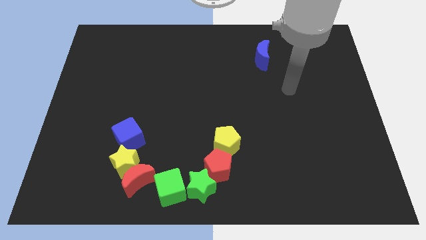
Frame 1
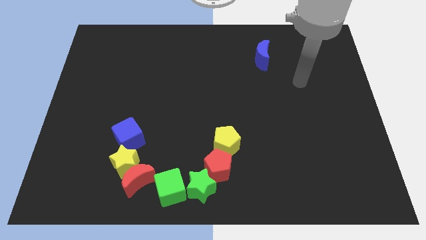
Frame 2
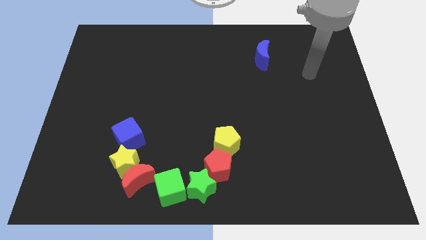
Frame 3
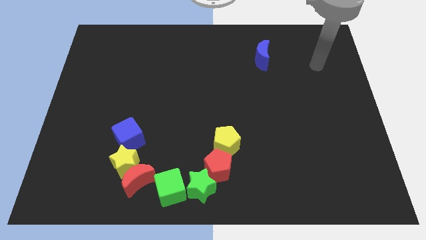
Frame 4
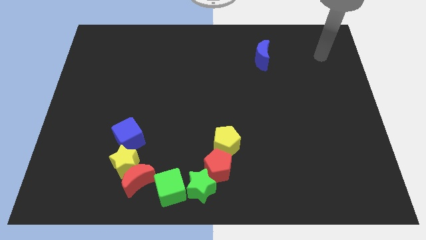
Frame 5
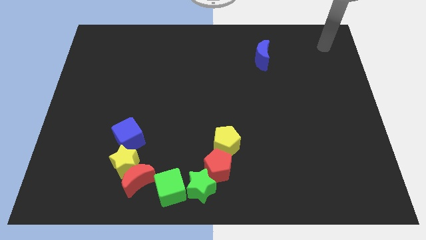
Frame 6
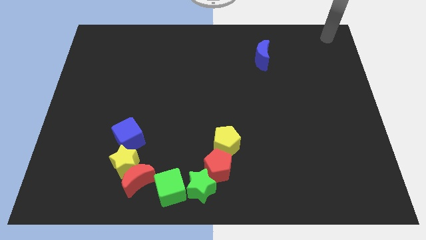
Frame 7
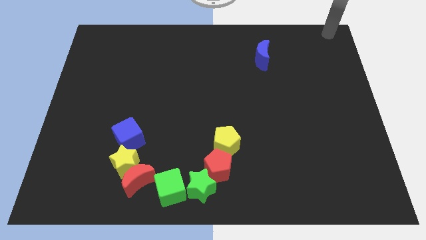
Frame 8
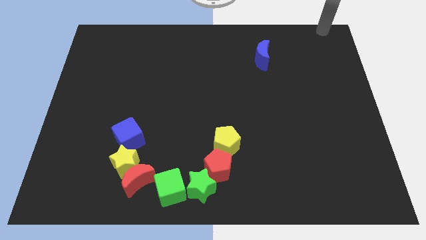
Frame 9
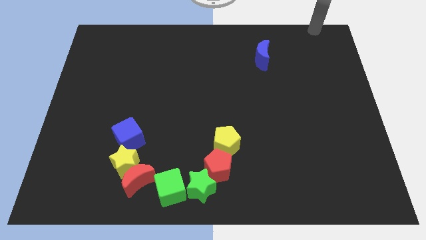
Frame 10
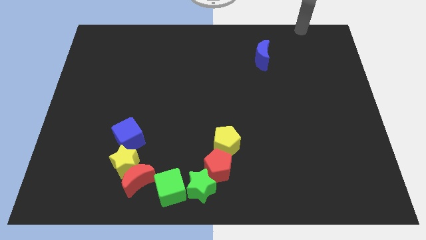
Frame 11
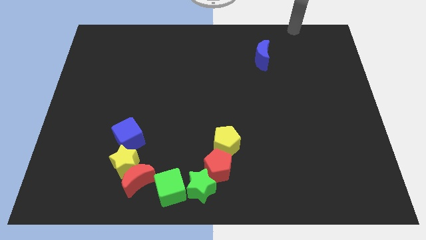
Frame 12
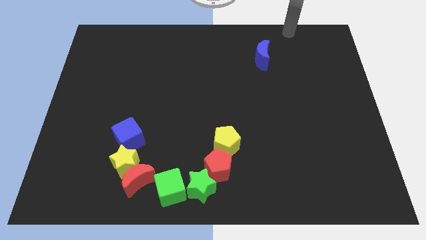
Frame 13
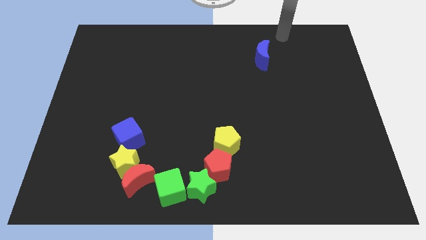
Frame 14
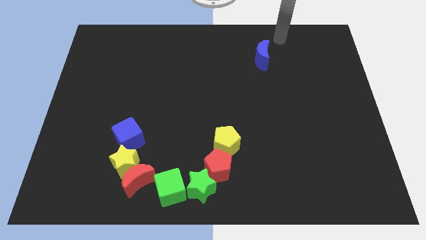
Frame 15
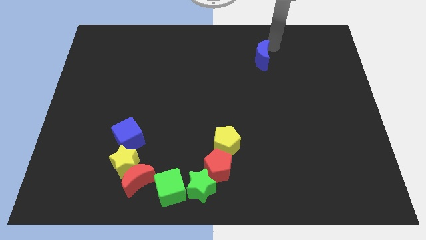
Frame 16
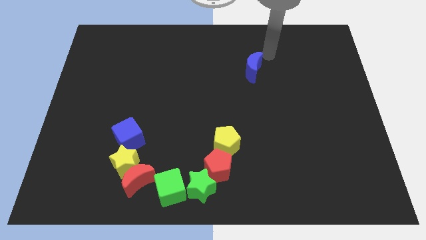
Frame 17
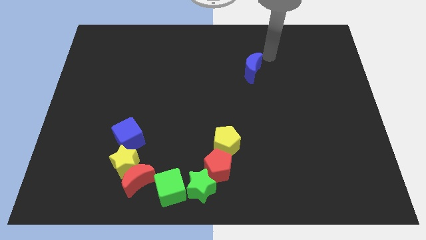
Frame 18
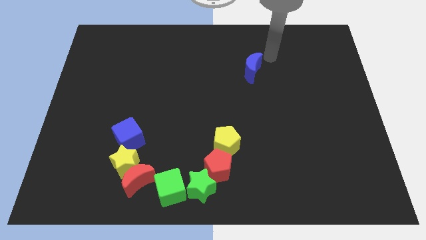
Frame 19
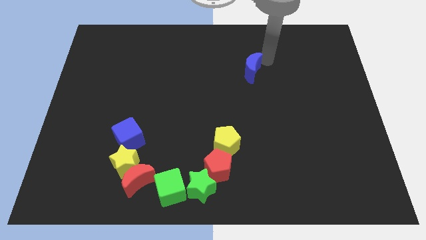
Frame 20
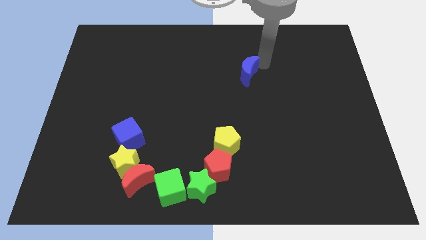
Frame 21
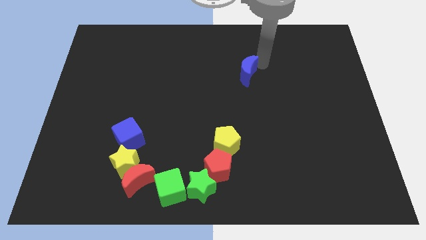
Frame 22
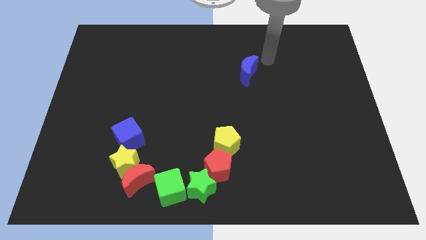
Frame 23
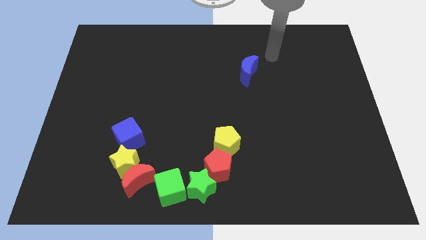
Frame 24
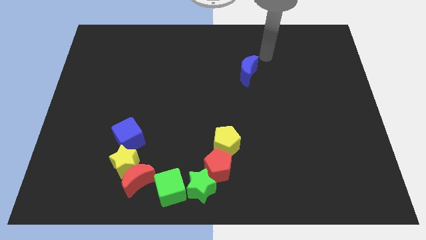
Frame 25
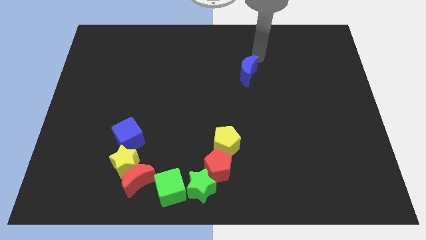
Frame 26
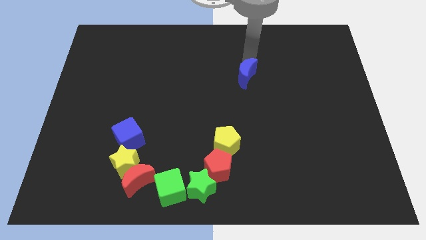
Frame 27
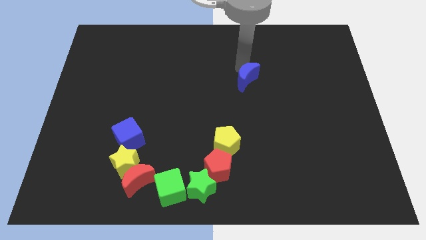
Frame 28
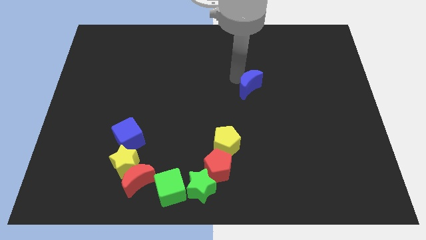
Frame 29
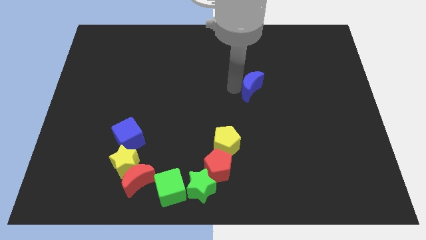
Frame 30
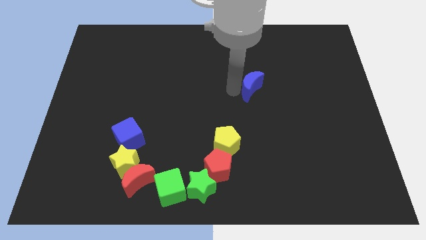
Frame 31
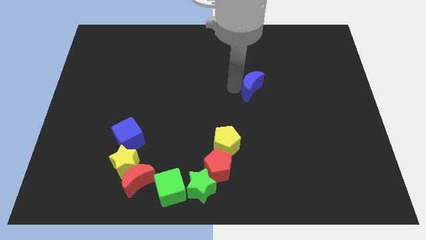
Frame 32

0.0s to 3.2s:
push blue moon slightly down

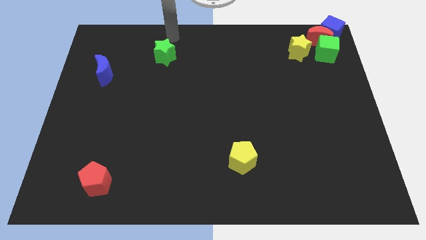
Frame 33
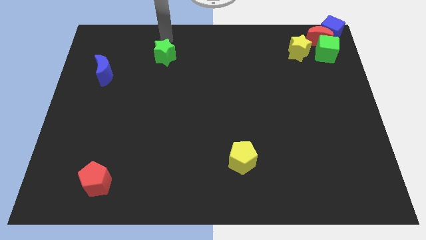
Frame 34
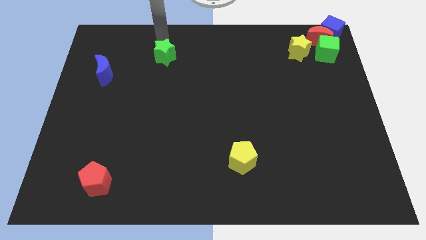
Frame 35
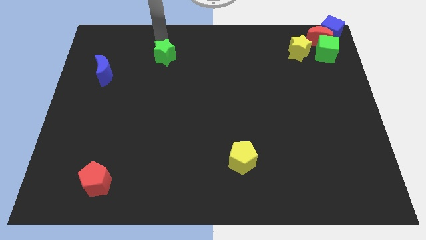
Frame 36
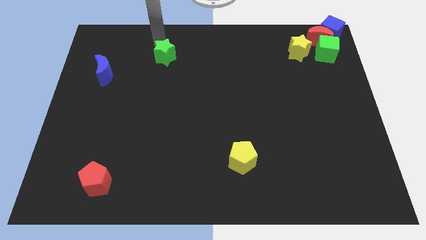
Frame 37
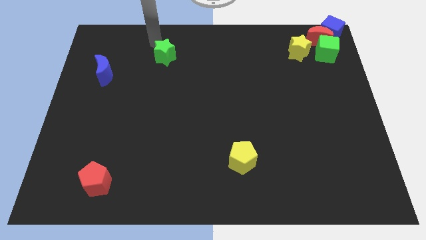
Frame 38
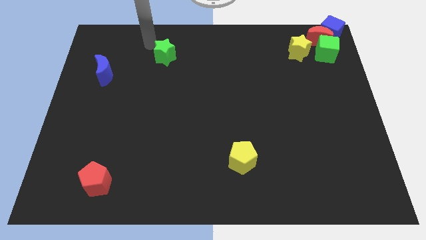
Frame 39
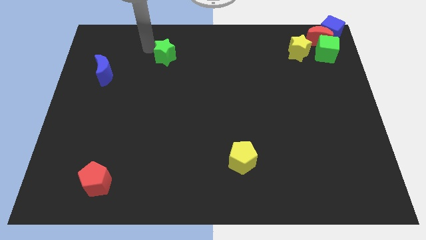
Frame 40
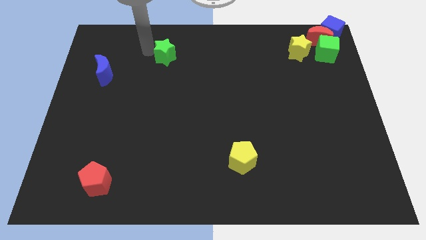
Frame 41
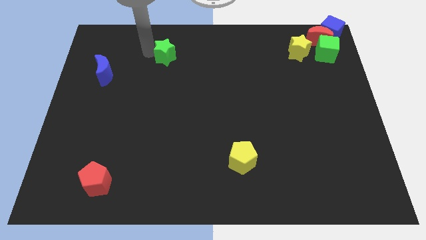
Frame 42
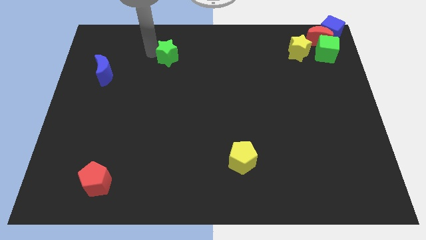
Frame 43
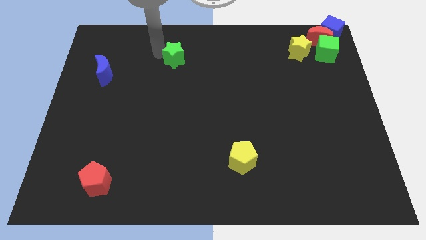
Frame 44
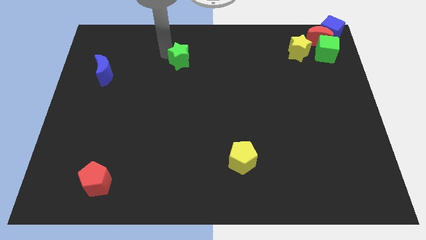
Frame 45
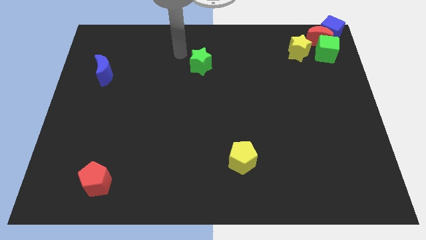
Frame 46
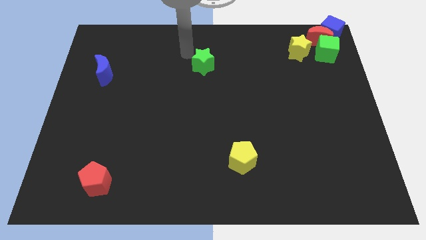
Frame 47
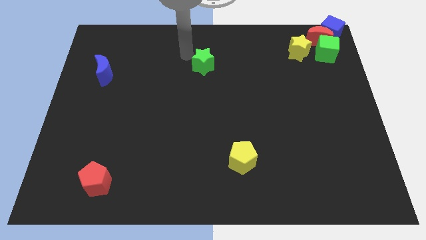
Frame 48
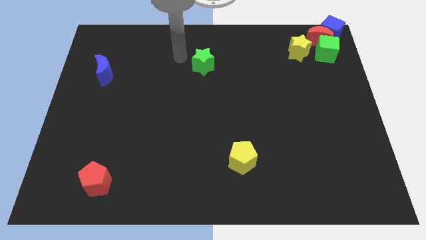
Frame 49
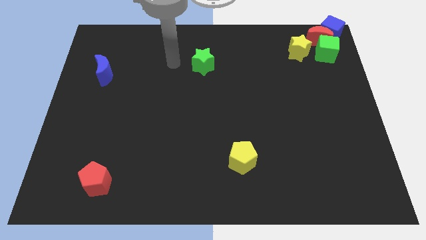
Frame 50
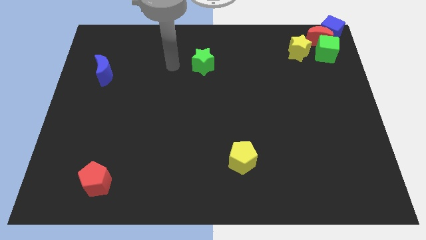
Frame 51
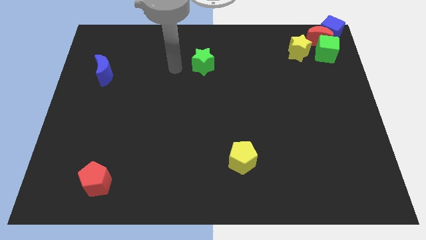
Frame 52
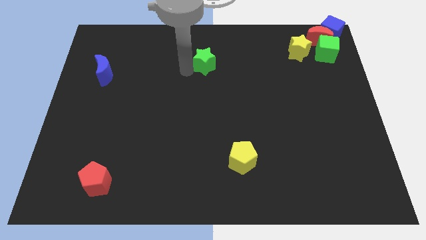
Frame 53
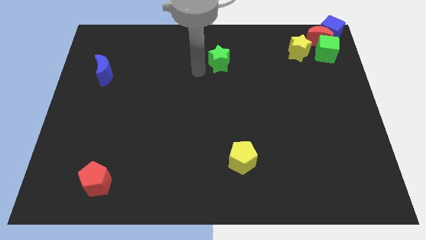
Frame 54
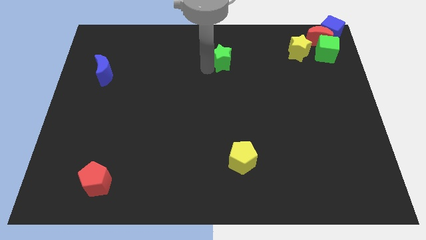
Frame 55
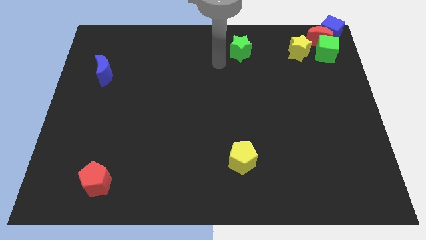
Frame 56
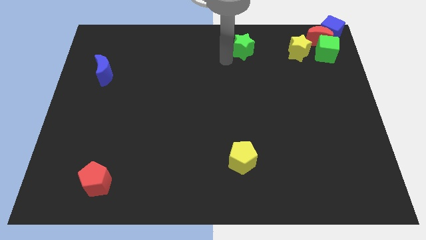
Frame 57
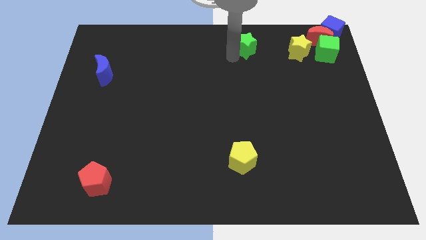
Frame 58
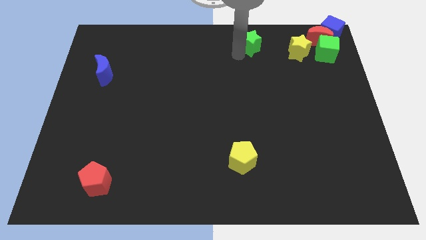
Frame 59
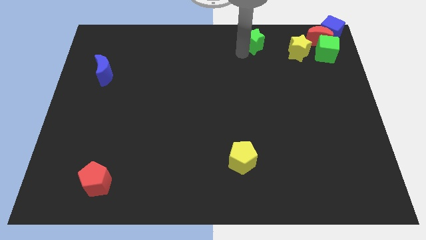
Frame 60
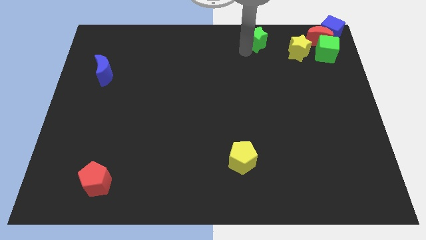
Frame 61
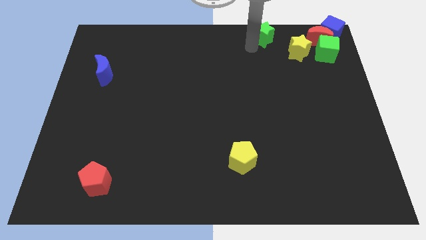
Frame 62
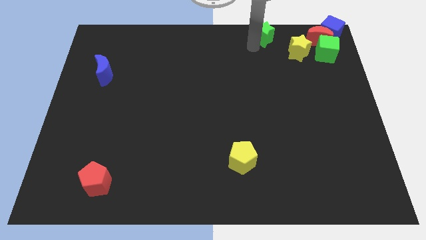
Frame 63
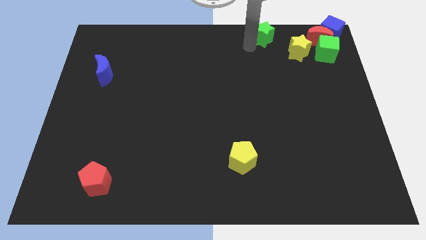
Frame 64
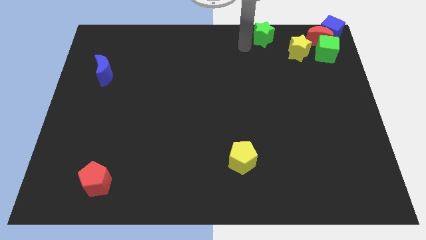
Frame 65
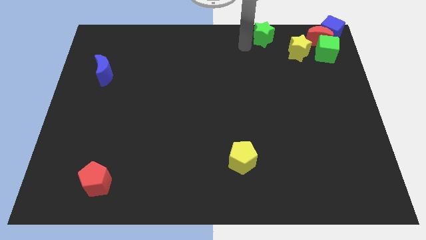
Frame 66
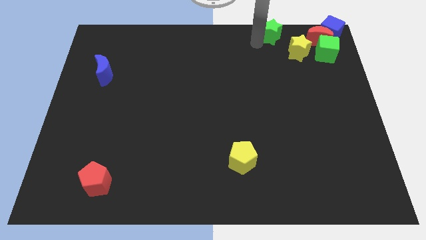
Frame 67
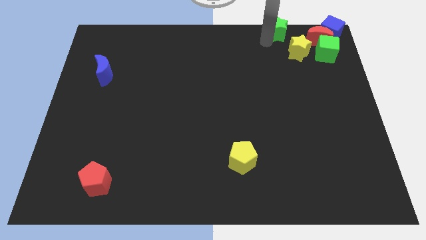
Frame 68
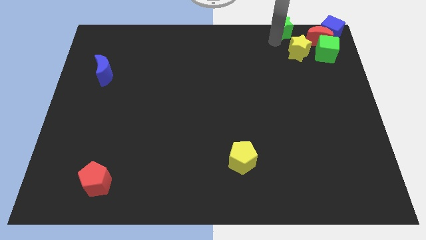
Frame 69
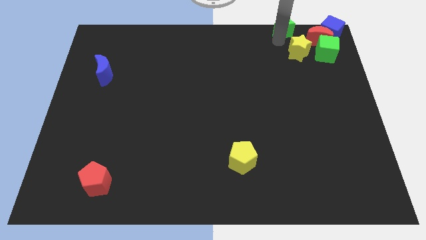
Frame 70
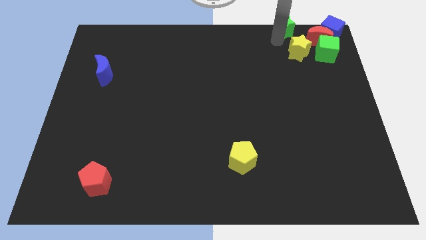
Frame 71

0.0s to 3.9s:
push the green star to the right

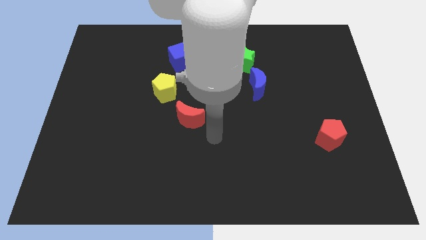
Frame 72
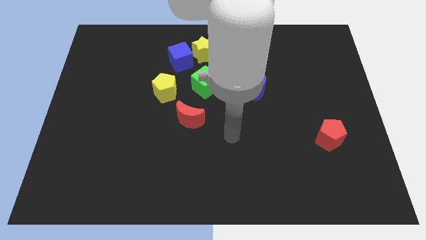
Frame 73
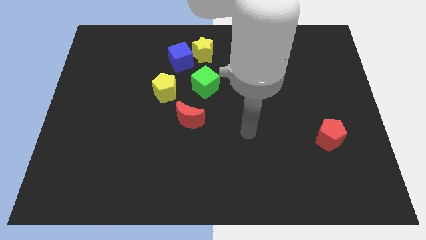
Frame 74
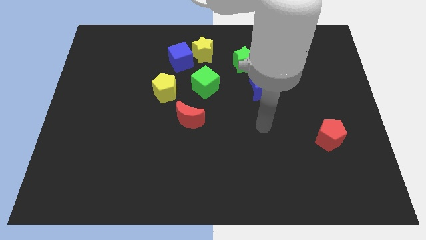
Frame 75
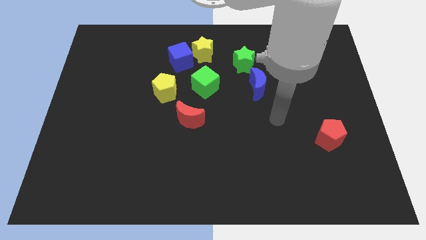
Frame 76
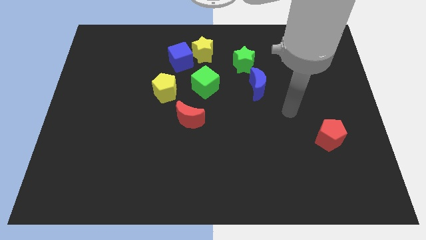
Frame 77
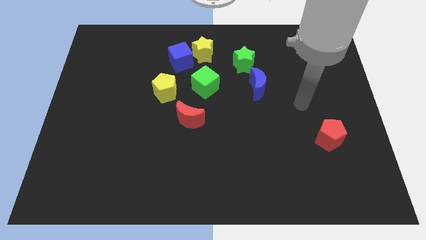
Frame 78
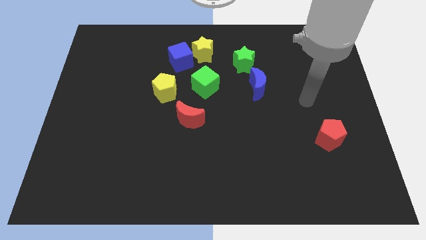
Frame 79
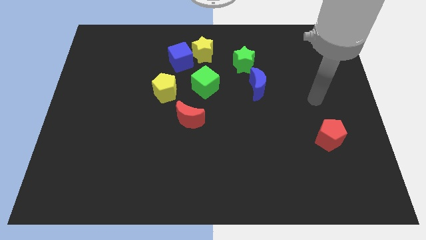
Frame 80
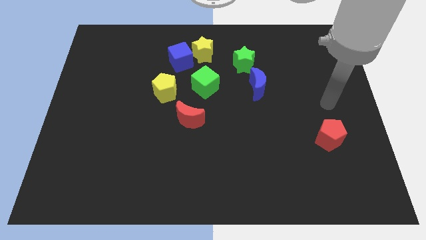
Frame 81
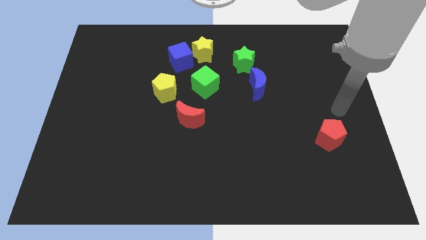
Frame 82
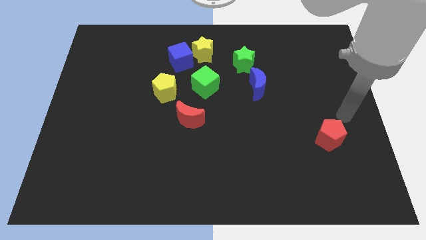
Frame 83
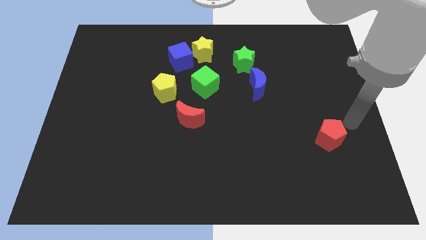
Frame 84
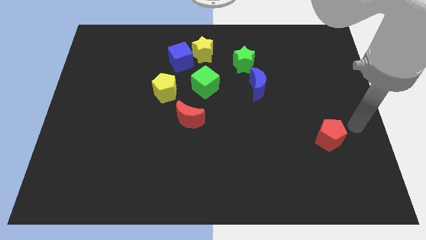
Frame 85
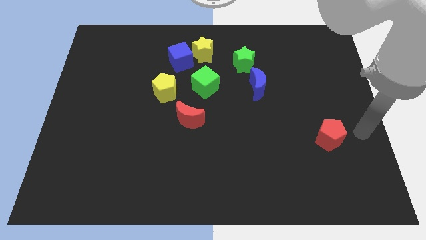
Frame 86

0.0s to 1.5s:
move your arm to the right of red pentagon

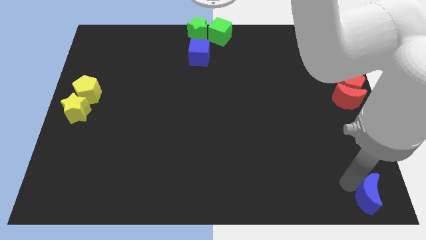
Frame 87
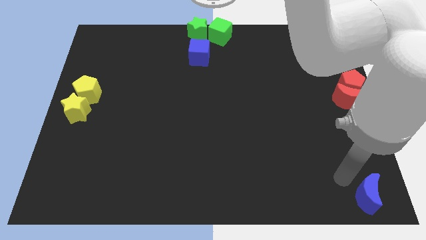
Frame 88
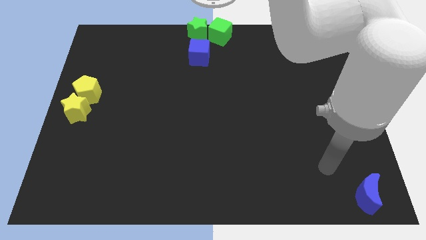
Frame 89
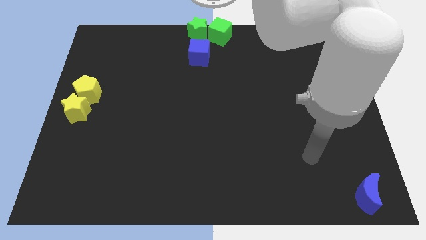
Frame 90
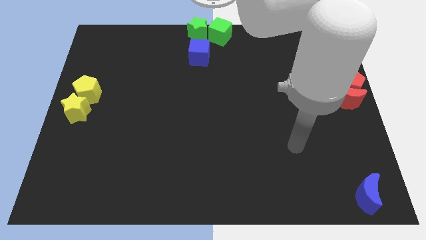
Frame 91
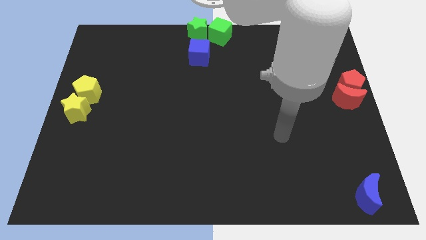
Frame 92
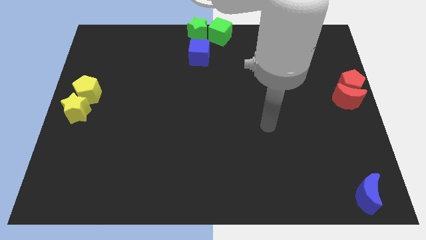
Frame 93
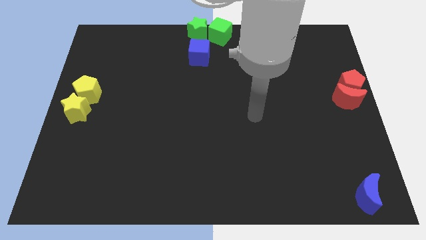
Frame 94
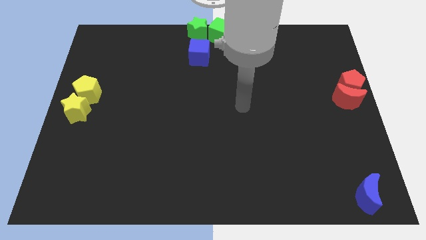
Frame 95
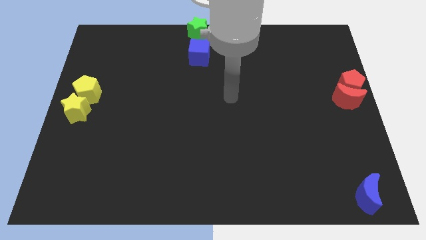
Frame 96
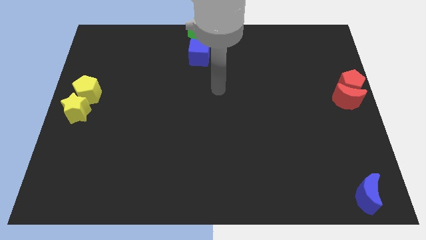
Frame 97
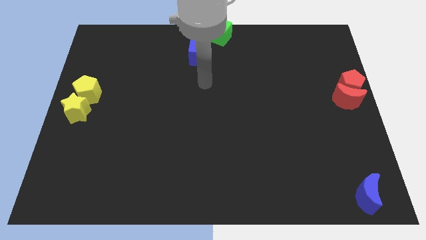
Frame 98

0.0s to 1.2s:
move the arm away from the blue moon
